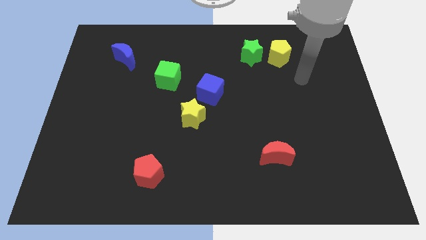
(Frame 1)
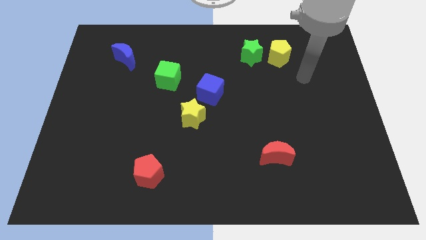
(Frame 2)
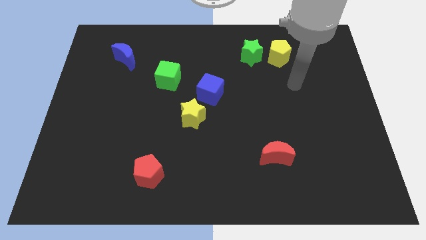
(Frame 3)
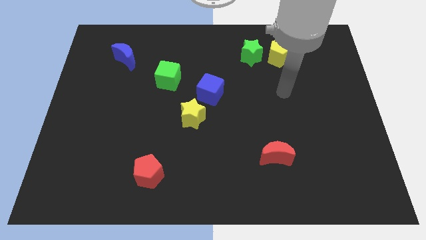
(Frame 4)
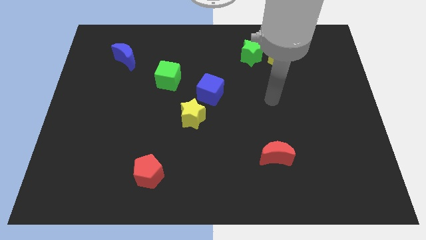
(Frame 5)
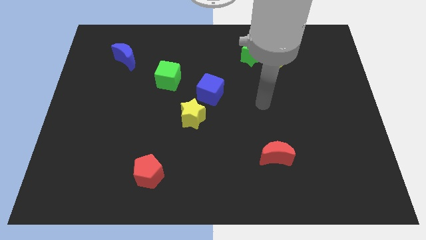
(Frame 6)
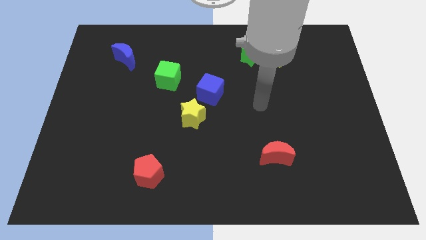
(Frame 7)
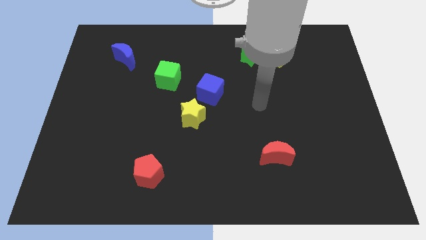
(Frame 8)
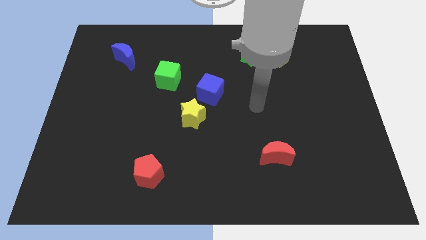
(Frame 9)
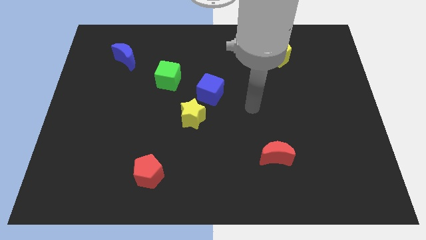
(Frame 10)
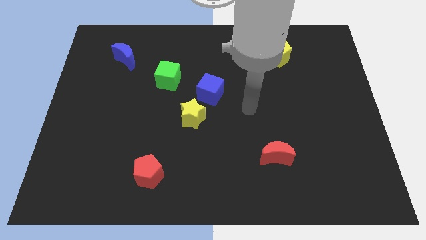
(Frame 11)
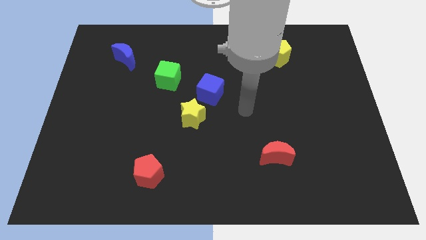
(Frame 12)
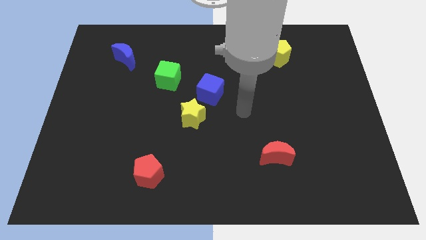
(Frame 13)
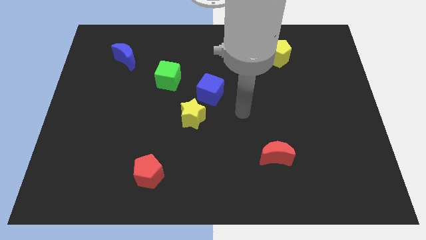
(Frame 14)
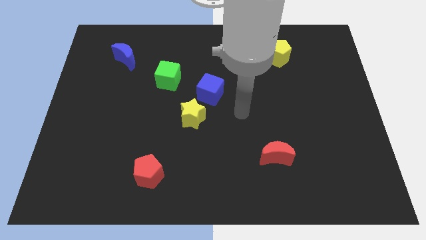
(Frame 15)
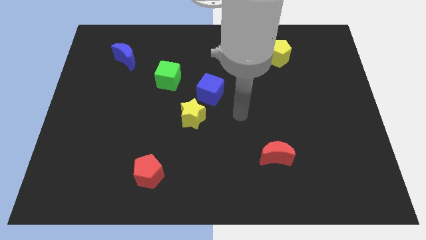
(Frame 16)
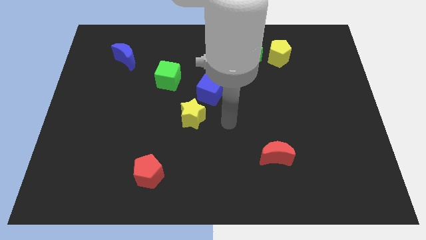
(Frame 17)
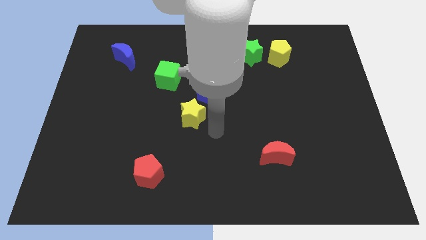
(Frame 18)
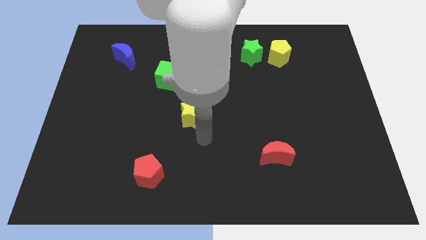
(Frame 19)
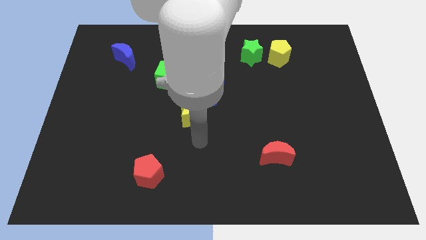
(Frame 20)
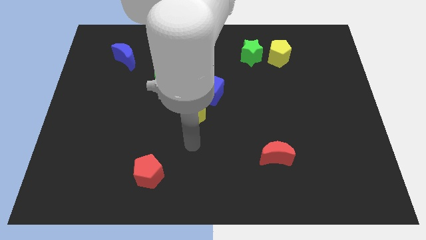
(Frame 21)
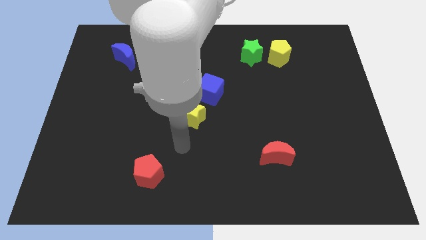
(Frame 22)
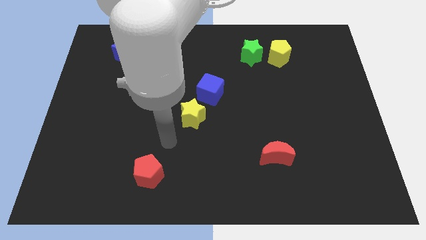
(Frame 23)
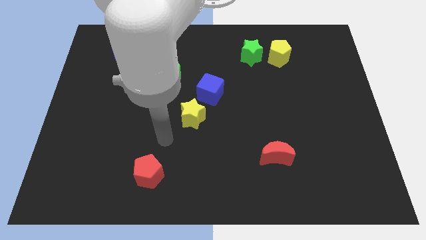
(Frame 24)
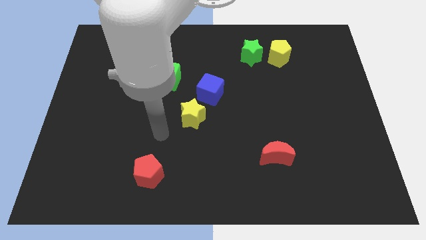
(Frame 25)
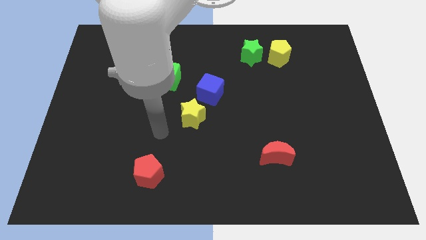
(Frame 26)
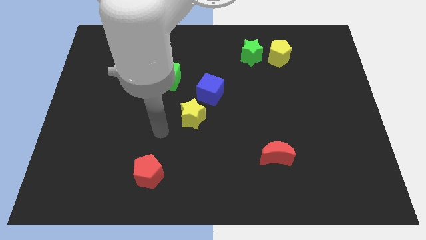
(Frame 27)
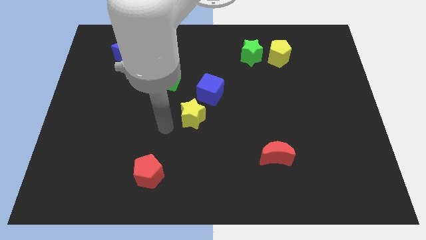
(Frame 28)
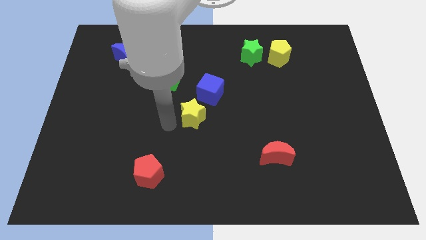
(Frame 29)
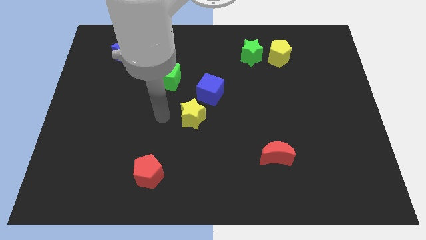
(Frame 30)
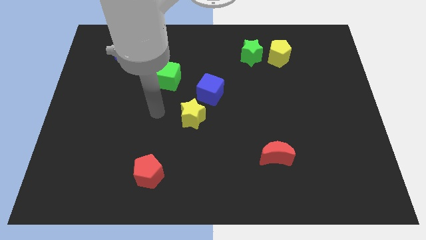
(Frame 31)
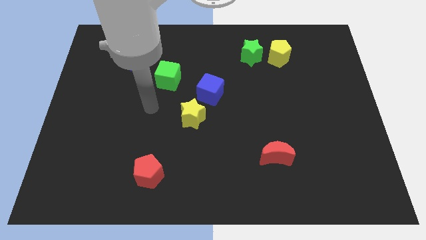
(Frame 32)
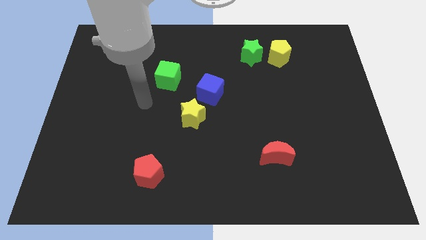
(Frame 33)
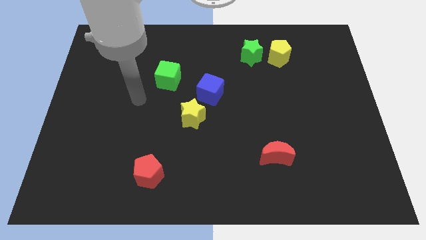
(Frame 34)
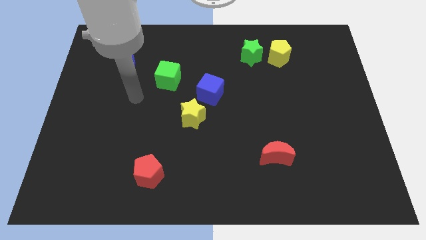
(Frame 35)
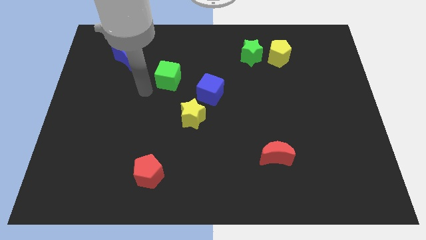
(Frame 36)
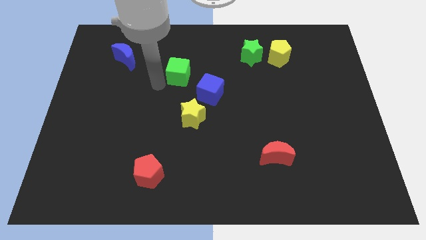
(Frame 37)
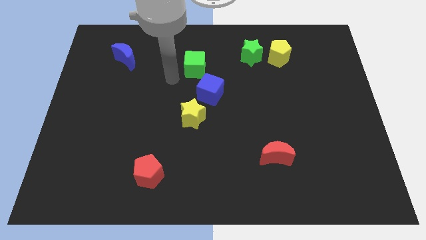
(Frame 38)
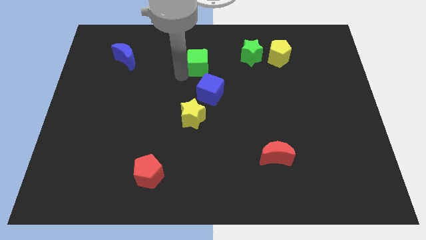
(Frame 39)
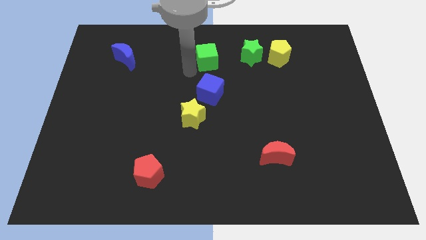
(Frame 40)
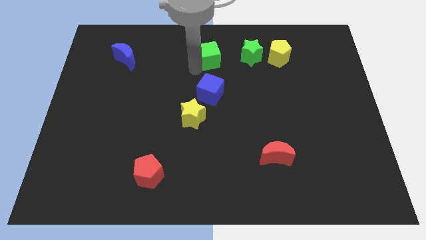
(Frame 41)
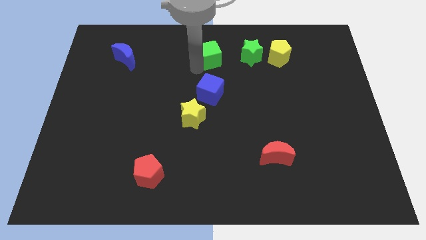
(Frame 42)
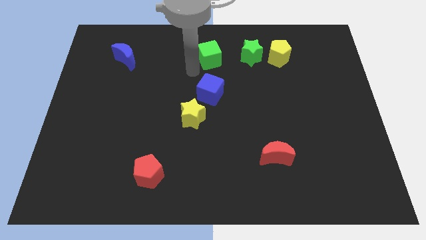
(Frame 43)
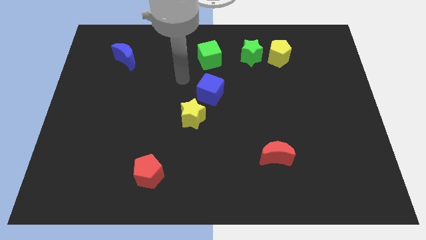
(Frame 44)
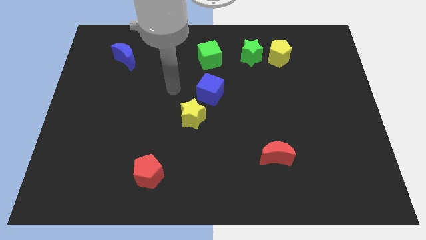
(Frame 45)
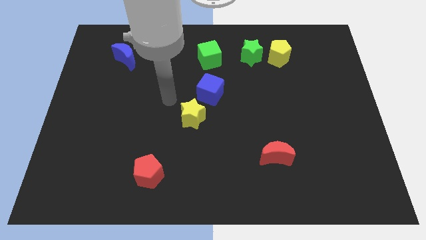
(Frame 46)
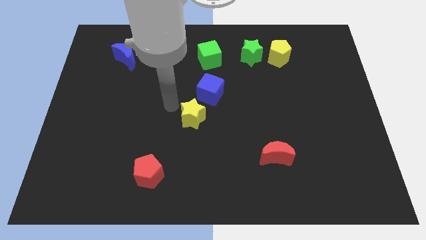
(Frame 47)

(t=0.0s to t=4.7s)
hit the green cube on its bottom side

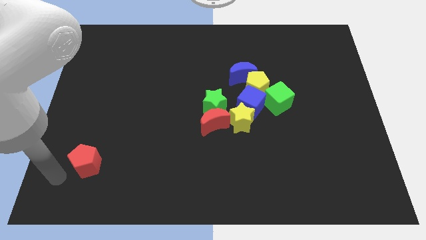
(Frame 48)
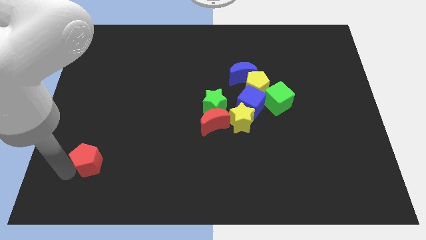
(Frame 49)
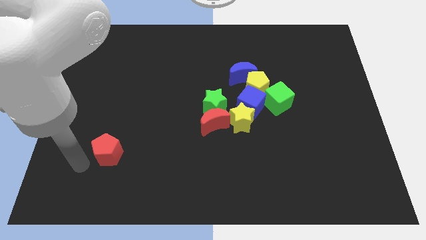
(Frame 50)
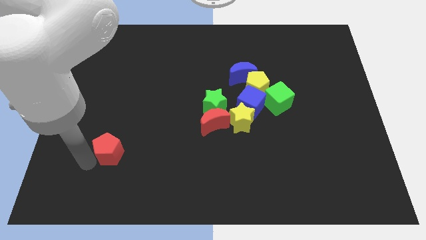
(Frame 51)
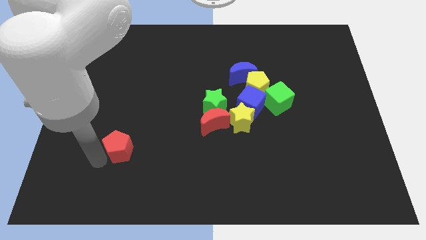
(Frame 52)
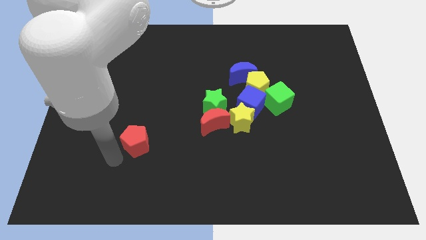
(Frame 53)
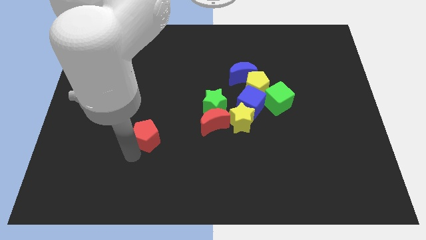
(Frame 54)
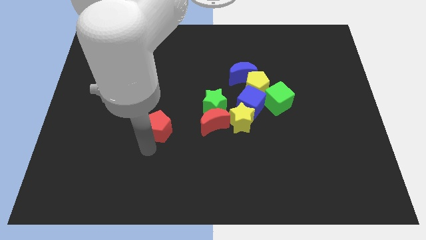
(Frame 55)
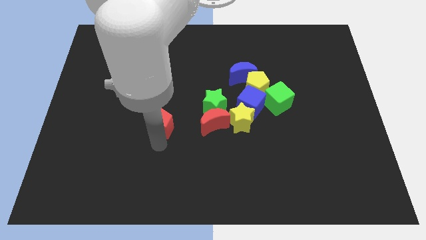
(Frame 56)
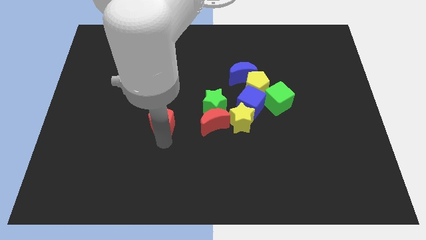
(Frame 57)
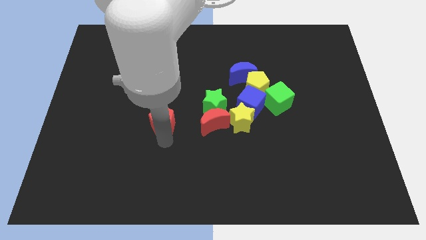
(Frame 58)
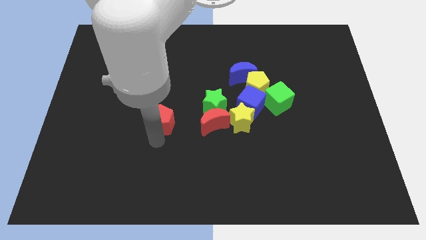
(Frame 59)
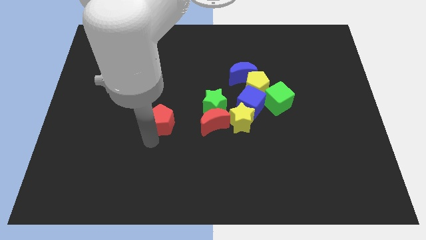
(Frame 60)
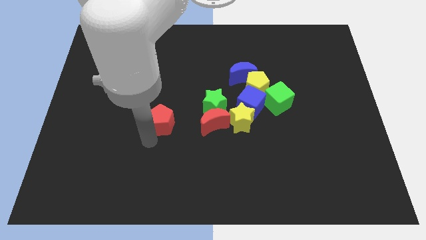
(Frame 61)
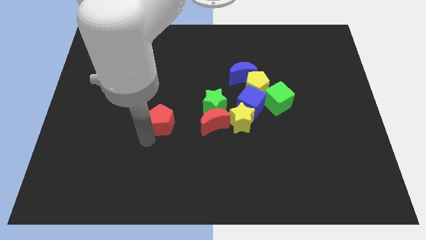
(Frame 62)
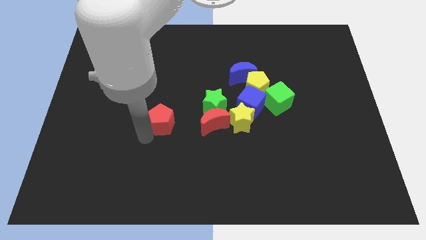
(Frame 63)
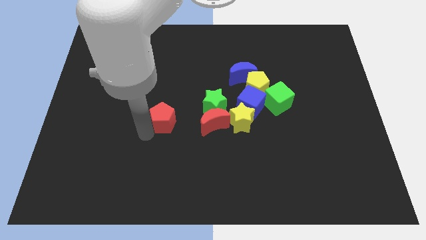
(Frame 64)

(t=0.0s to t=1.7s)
move the red pentagon left to the red moon

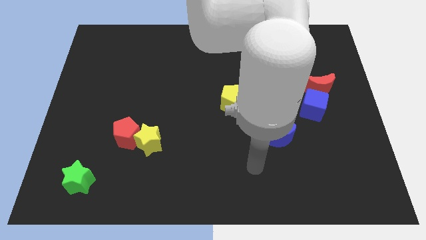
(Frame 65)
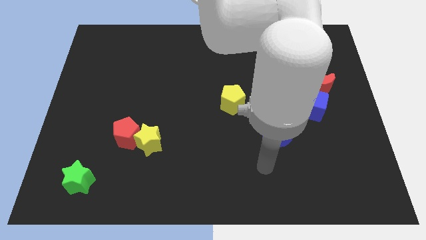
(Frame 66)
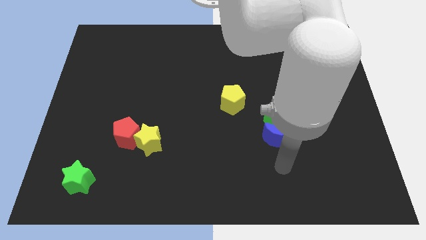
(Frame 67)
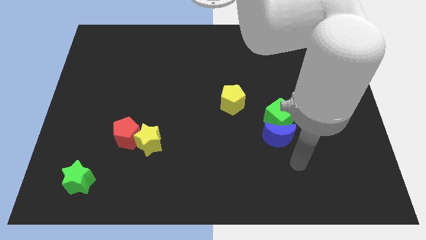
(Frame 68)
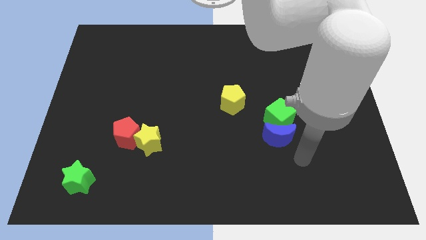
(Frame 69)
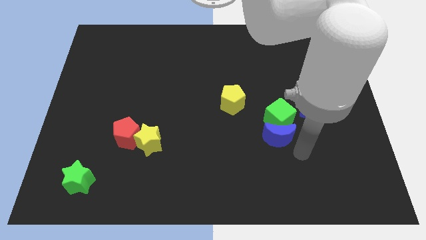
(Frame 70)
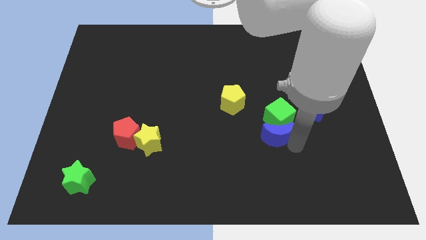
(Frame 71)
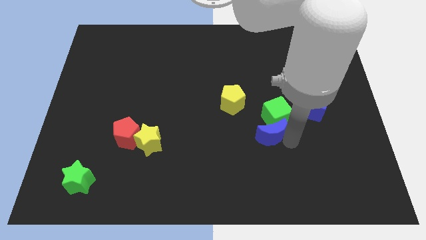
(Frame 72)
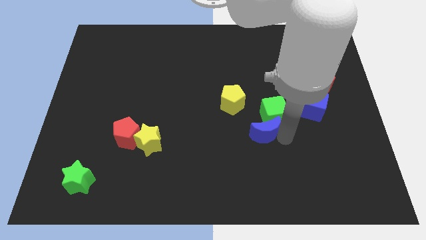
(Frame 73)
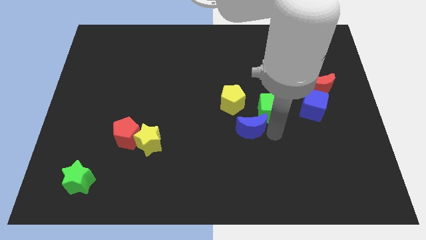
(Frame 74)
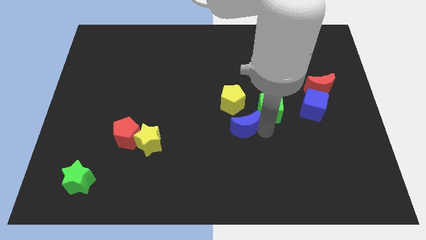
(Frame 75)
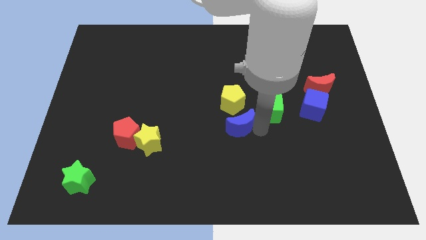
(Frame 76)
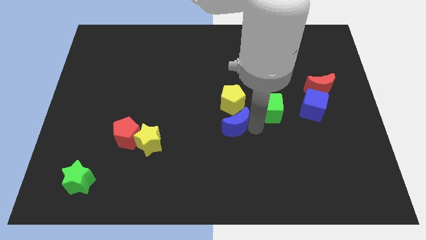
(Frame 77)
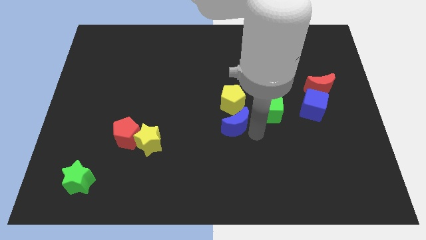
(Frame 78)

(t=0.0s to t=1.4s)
push the blue moon diagonal bottom right of yellow pentagon

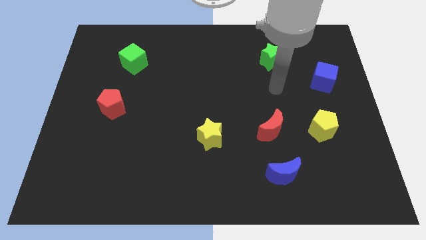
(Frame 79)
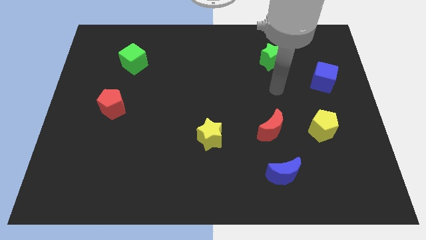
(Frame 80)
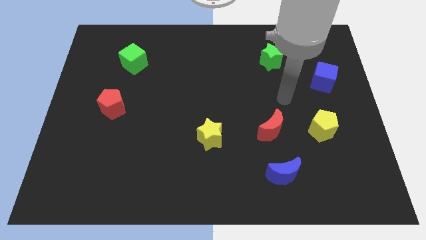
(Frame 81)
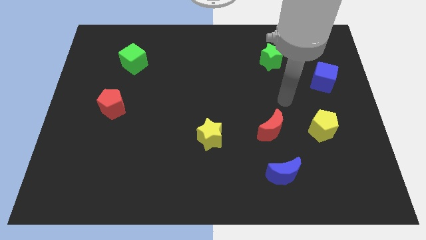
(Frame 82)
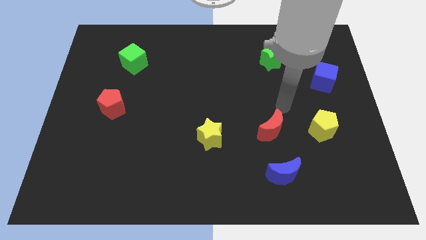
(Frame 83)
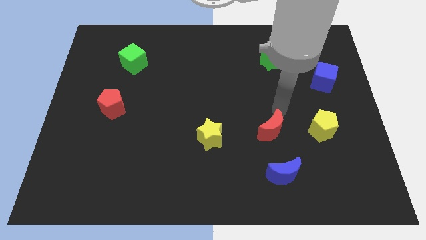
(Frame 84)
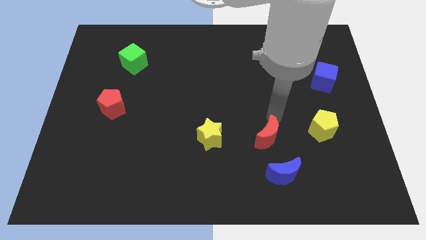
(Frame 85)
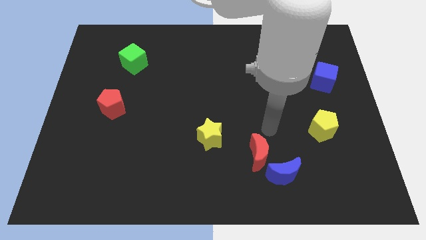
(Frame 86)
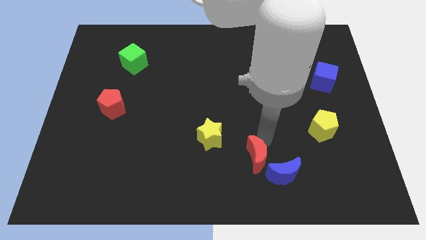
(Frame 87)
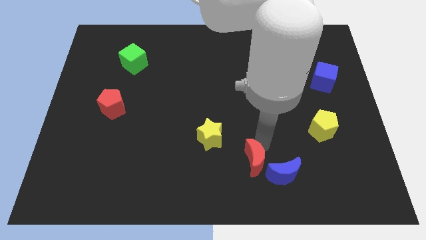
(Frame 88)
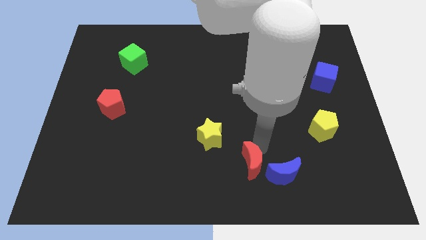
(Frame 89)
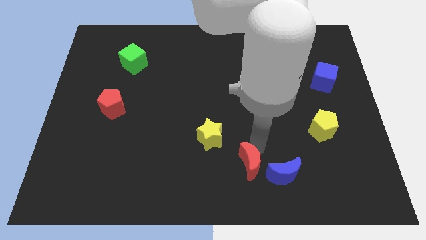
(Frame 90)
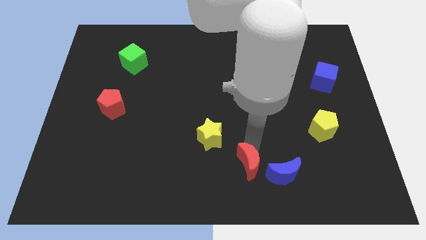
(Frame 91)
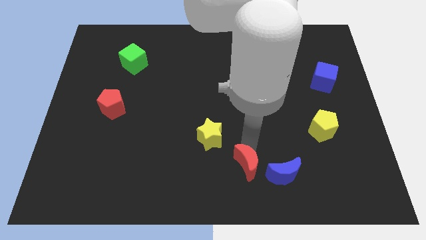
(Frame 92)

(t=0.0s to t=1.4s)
place the red moon in between the blue moon and the yellow star
